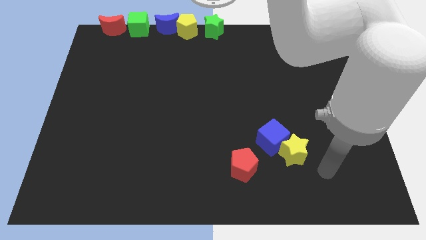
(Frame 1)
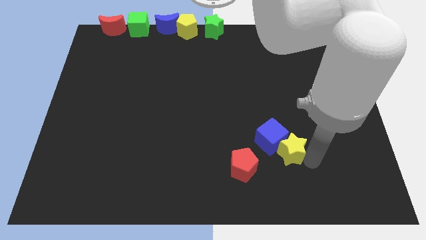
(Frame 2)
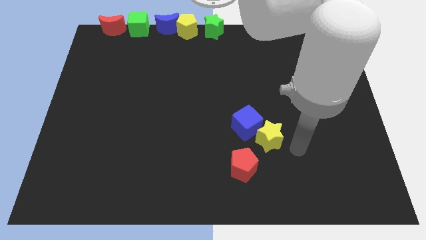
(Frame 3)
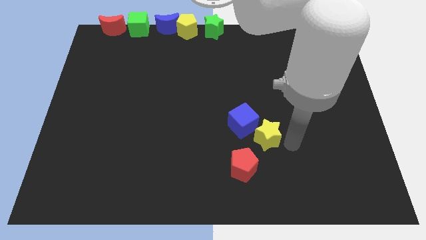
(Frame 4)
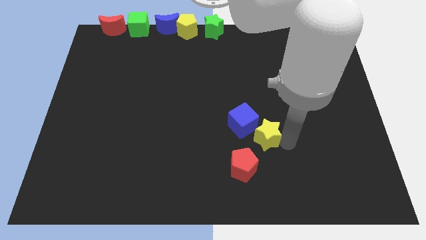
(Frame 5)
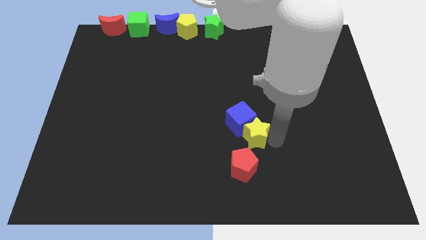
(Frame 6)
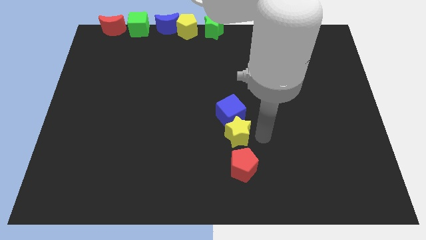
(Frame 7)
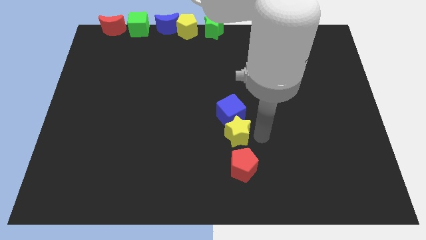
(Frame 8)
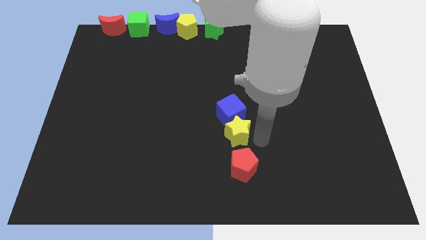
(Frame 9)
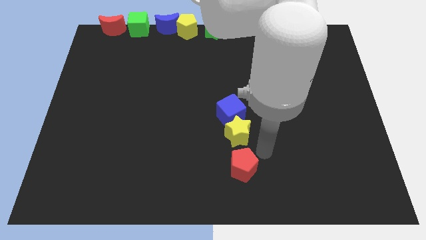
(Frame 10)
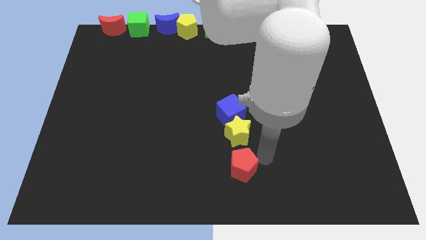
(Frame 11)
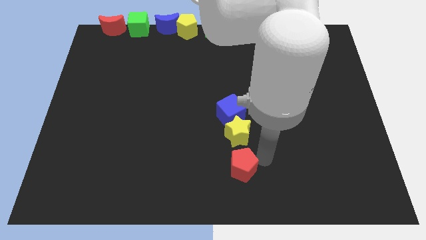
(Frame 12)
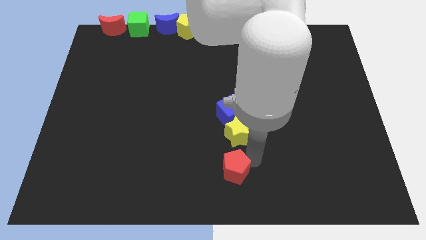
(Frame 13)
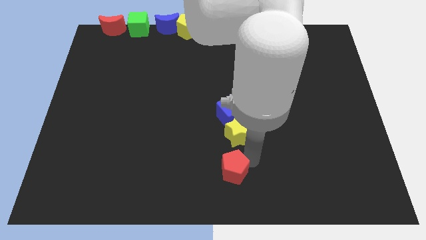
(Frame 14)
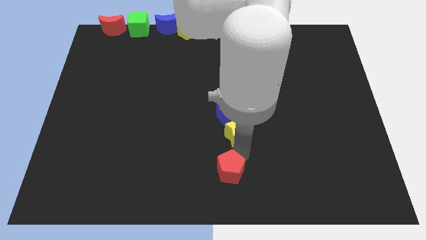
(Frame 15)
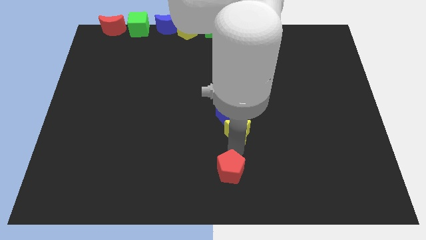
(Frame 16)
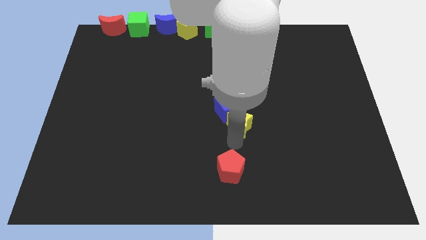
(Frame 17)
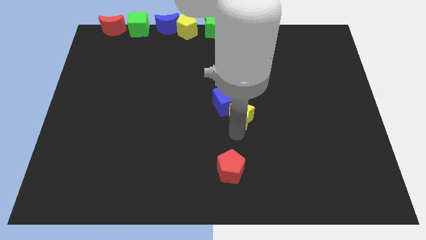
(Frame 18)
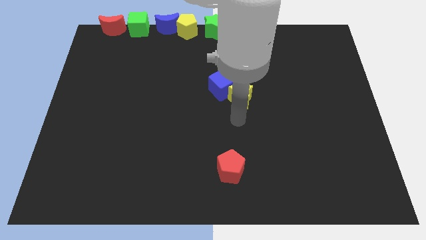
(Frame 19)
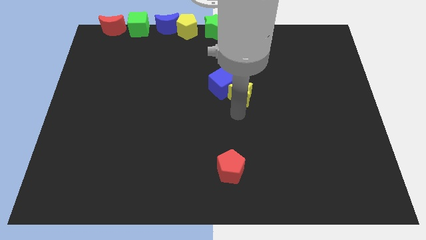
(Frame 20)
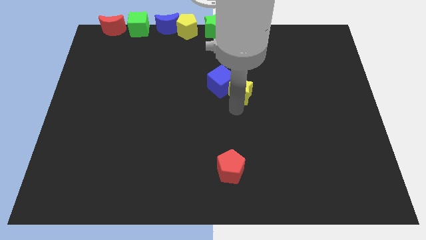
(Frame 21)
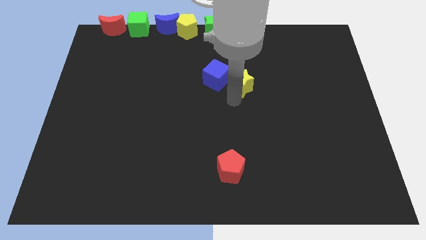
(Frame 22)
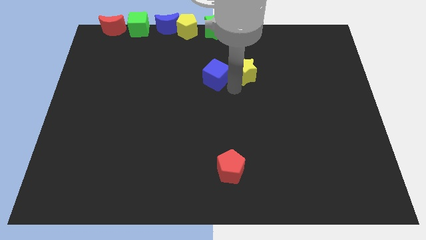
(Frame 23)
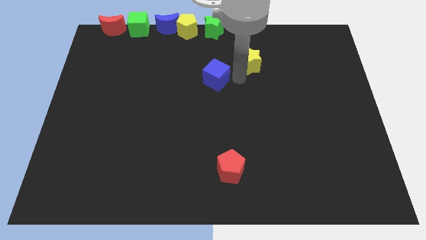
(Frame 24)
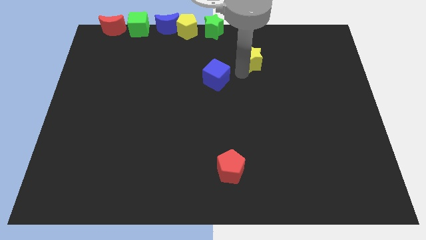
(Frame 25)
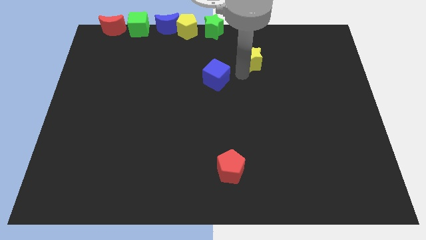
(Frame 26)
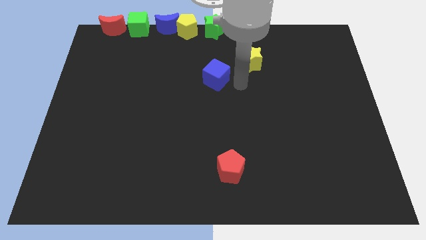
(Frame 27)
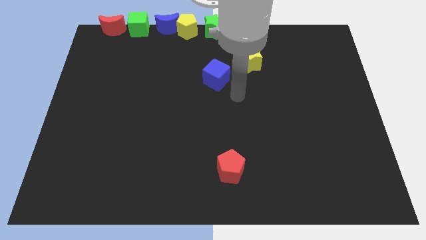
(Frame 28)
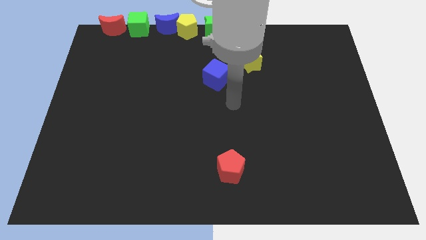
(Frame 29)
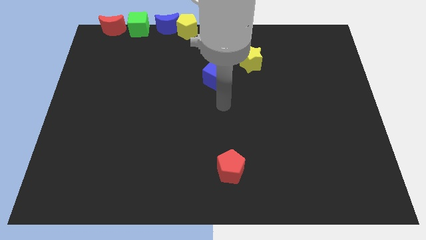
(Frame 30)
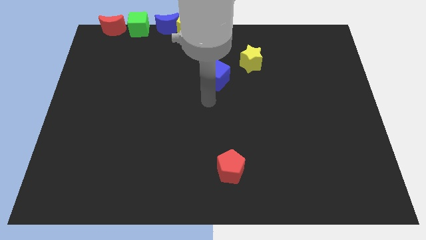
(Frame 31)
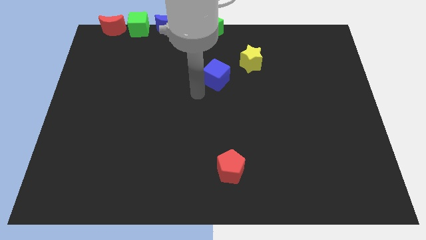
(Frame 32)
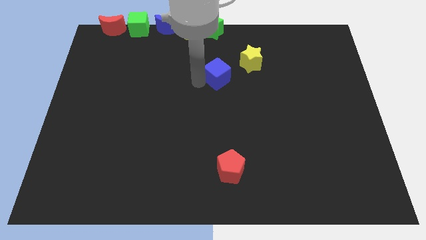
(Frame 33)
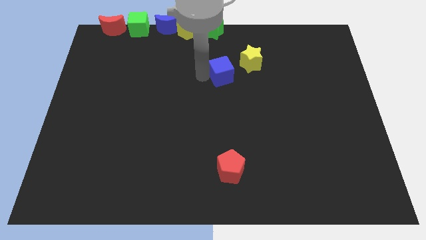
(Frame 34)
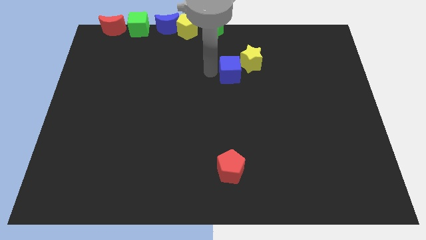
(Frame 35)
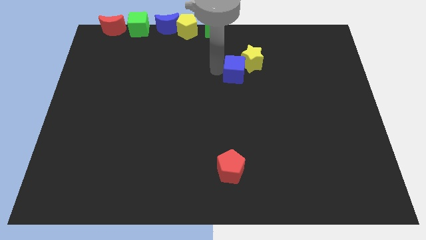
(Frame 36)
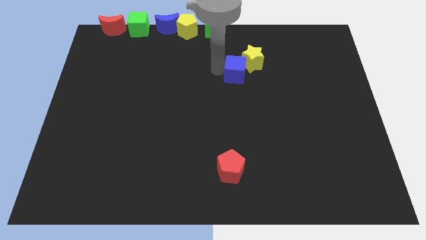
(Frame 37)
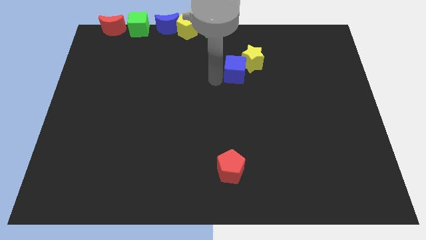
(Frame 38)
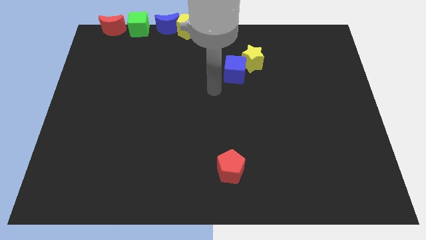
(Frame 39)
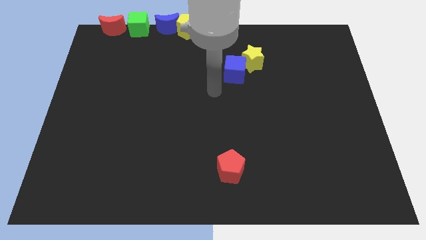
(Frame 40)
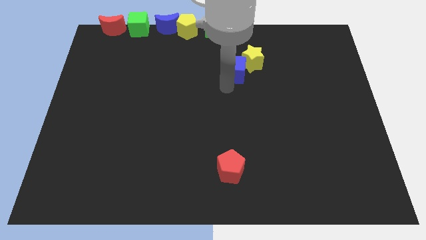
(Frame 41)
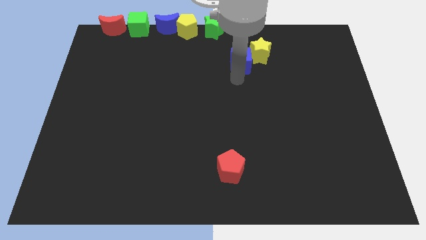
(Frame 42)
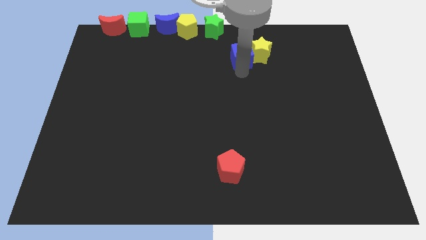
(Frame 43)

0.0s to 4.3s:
slide the blue cube and yellow star to the top side of the board

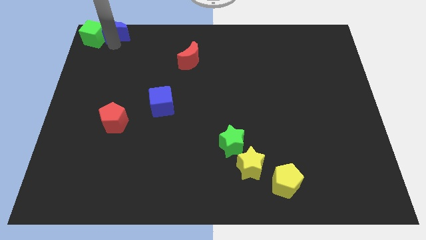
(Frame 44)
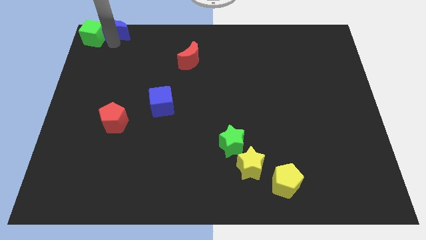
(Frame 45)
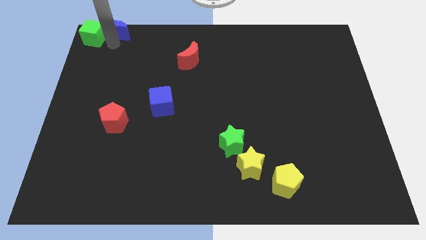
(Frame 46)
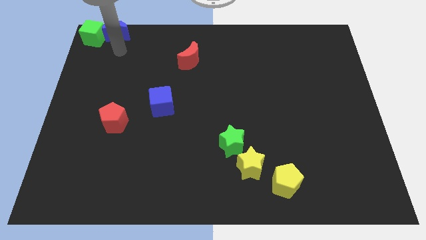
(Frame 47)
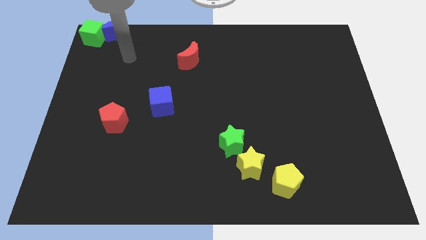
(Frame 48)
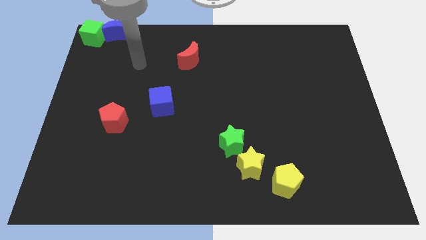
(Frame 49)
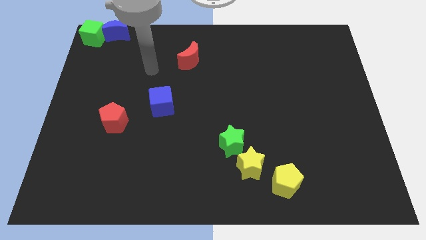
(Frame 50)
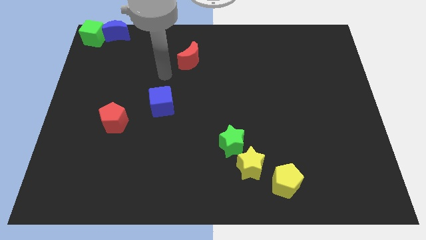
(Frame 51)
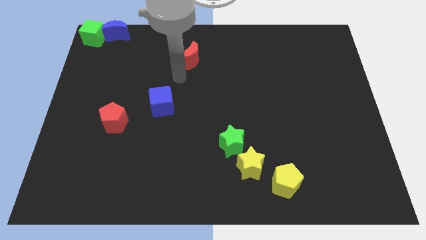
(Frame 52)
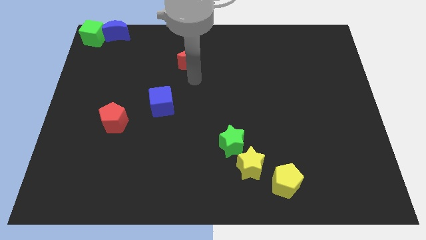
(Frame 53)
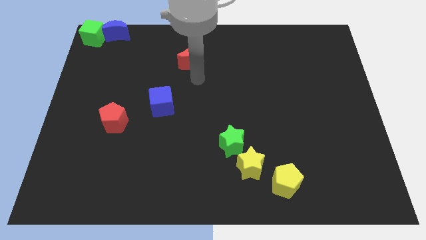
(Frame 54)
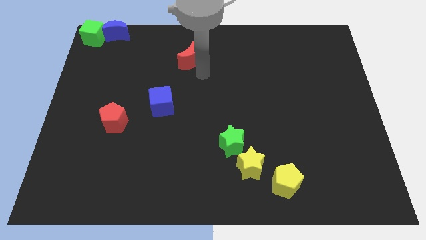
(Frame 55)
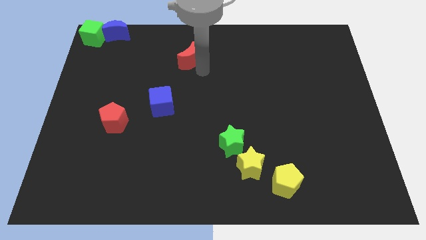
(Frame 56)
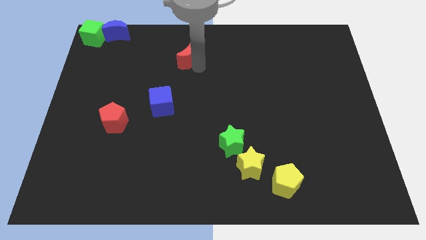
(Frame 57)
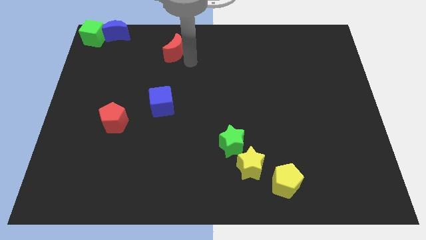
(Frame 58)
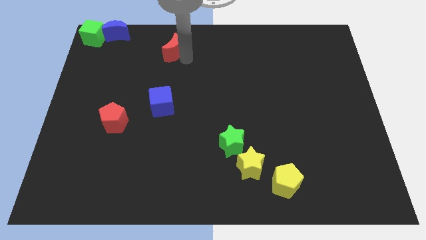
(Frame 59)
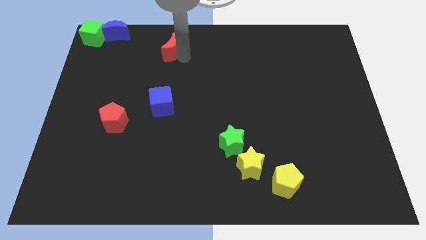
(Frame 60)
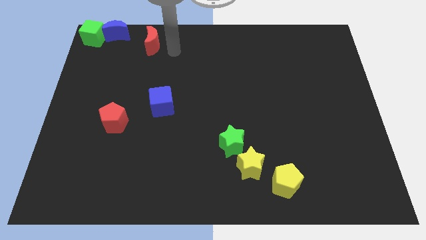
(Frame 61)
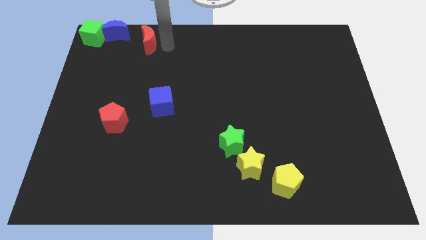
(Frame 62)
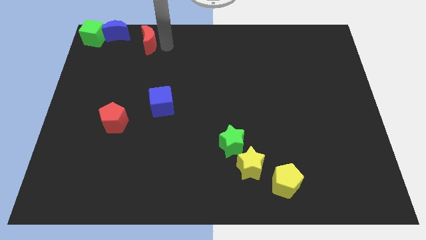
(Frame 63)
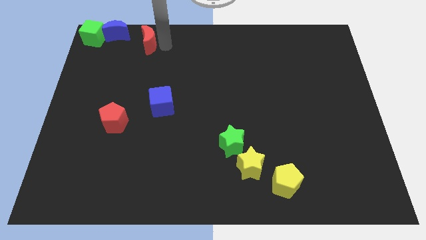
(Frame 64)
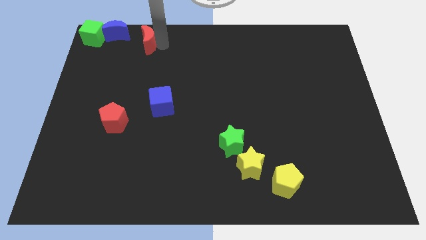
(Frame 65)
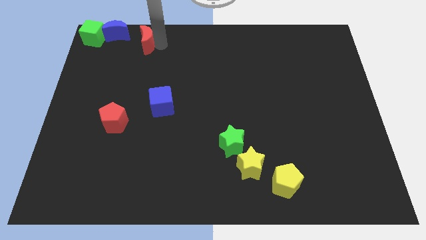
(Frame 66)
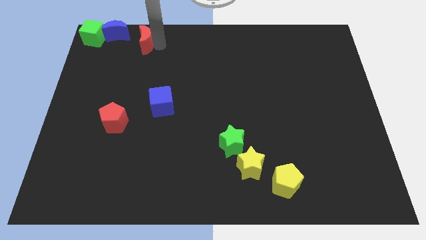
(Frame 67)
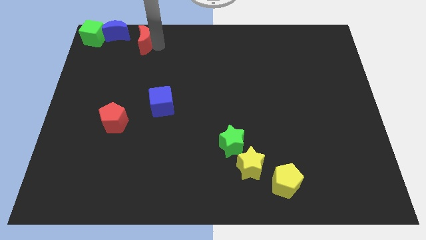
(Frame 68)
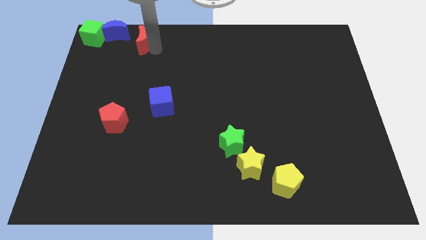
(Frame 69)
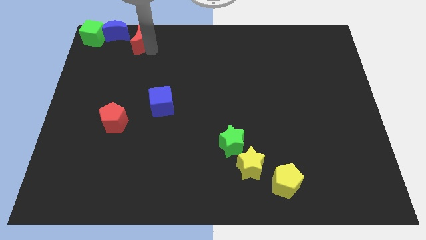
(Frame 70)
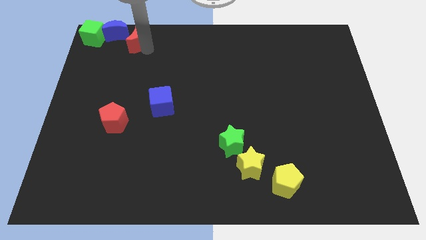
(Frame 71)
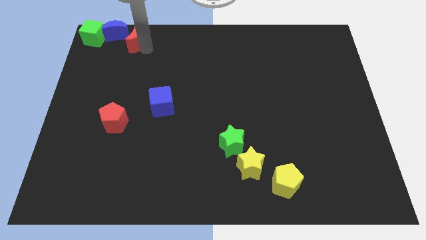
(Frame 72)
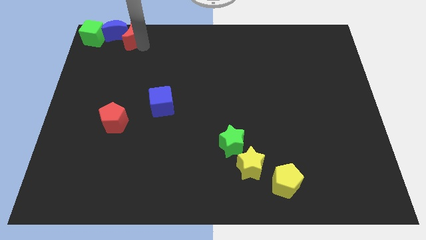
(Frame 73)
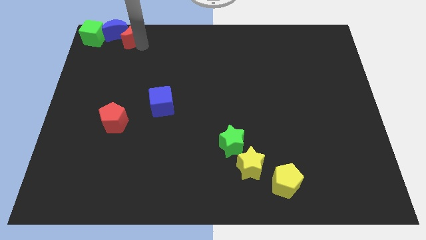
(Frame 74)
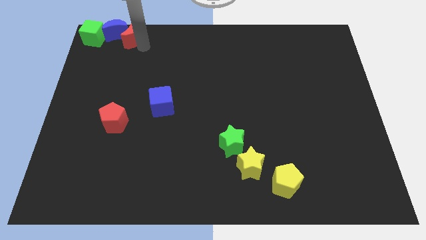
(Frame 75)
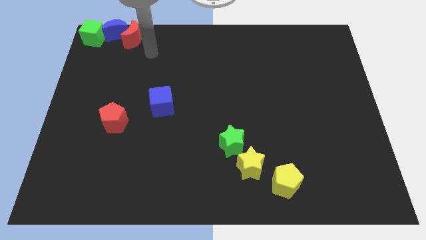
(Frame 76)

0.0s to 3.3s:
slide the red crescent into the right side of the blue crescent

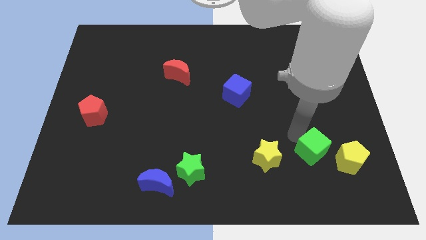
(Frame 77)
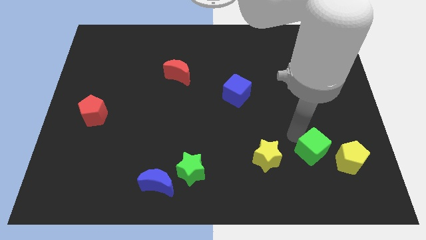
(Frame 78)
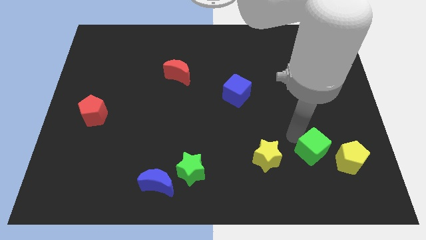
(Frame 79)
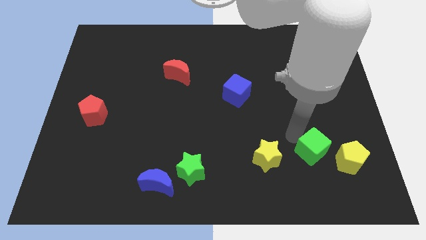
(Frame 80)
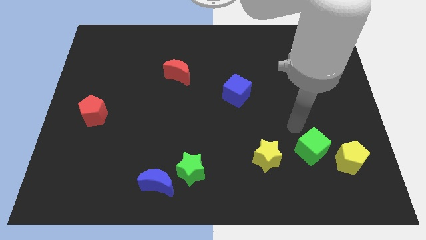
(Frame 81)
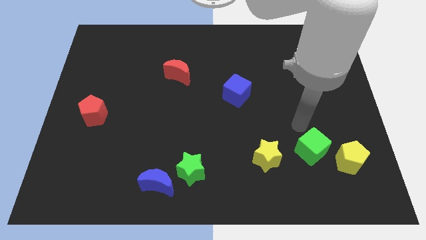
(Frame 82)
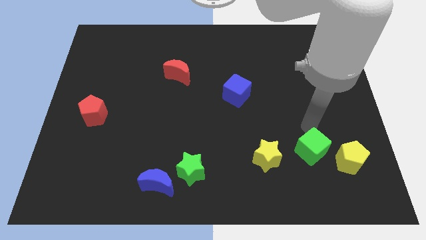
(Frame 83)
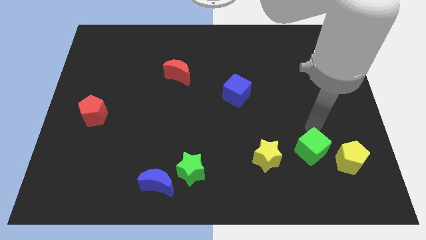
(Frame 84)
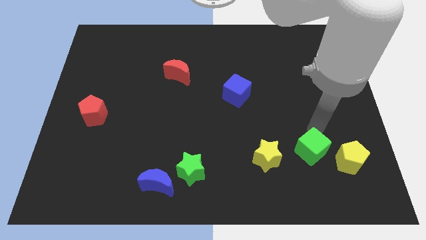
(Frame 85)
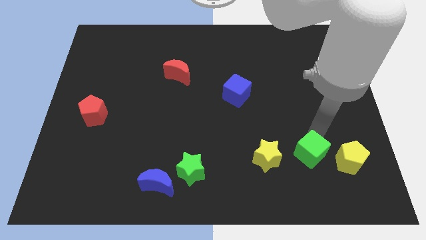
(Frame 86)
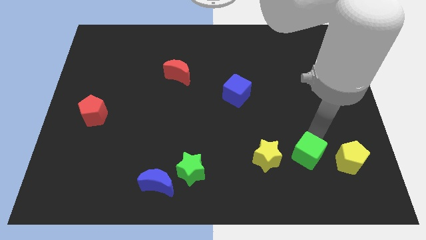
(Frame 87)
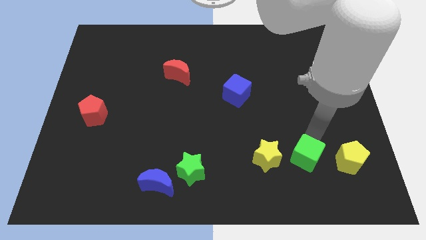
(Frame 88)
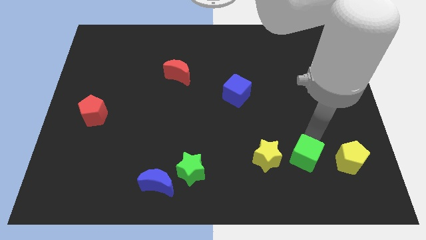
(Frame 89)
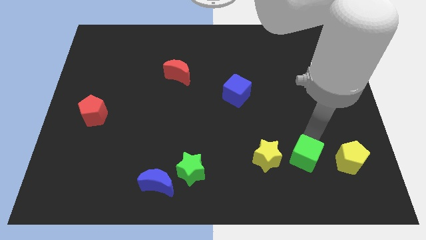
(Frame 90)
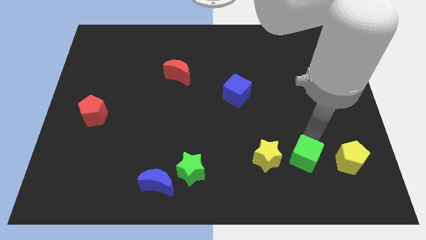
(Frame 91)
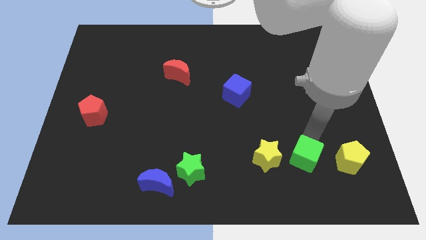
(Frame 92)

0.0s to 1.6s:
put the green cube right to the yellow star
